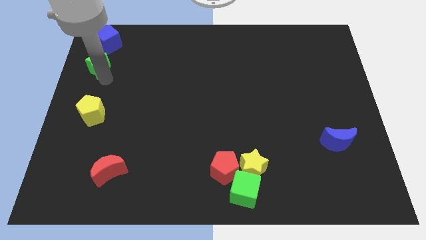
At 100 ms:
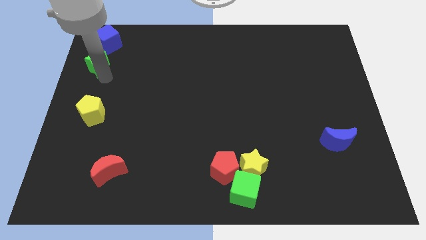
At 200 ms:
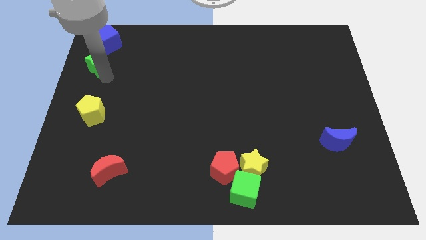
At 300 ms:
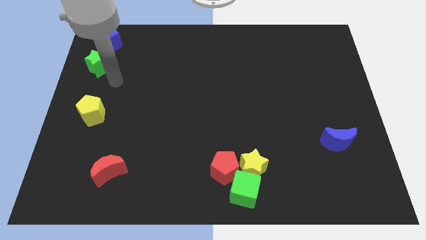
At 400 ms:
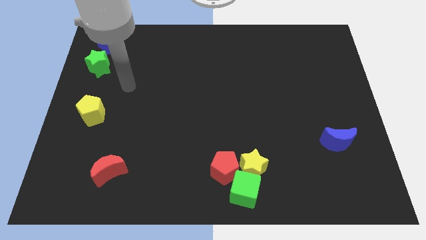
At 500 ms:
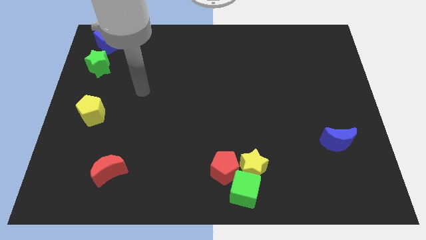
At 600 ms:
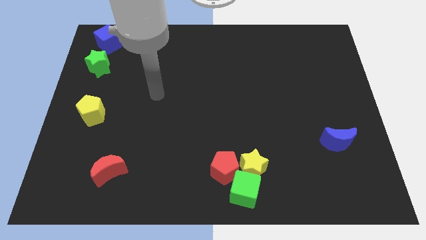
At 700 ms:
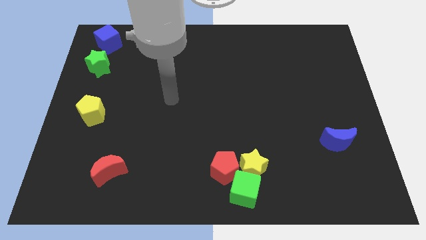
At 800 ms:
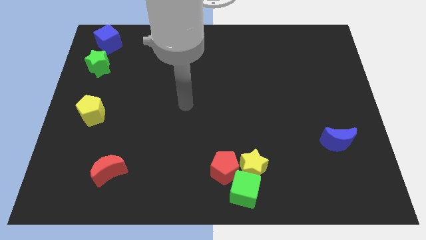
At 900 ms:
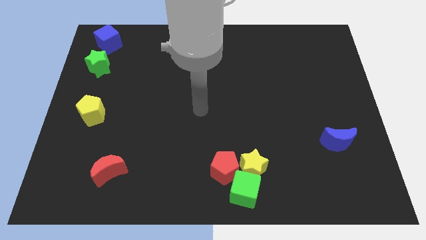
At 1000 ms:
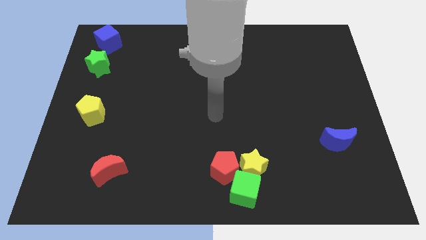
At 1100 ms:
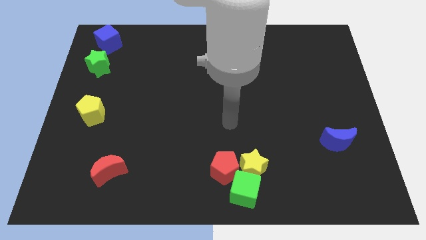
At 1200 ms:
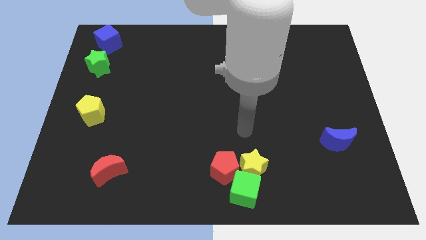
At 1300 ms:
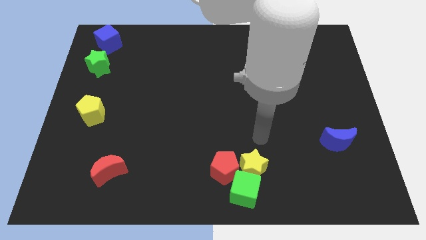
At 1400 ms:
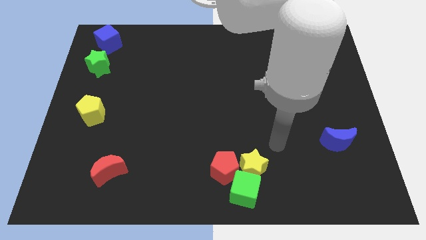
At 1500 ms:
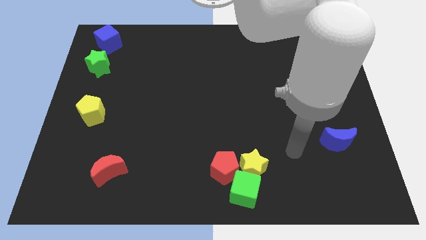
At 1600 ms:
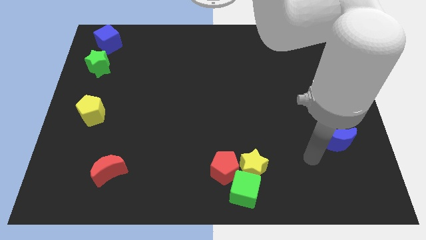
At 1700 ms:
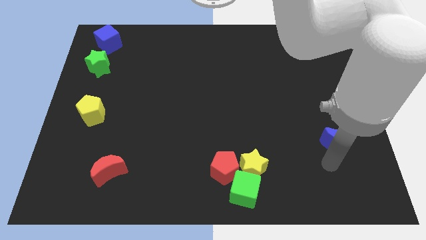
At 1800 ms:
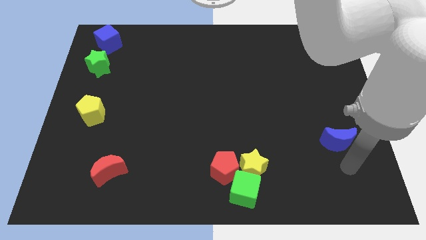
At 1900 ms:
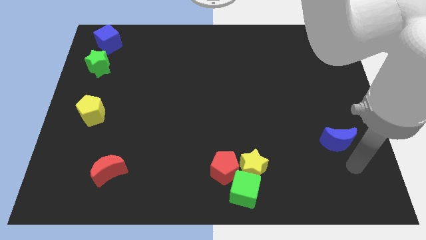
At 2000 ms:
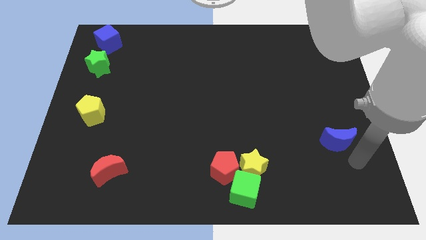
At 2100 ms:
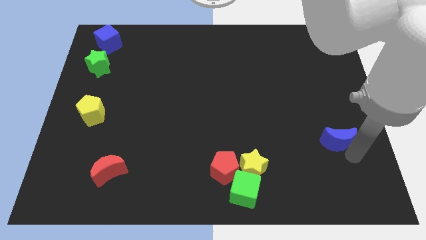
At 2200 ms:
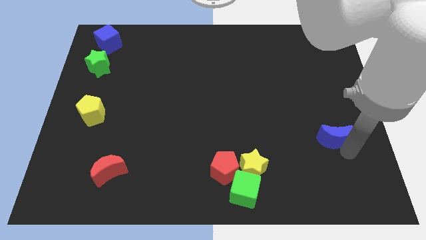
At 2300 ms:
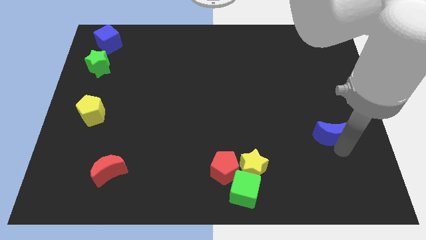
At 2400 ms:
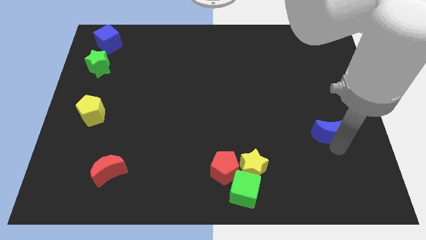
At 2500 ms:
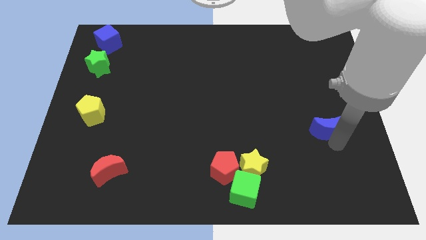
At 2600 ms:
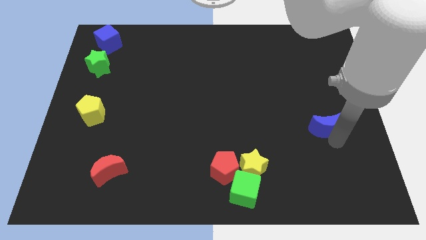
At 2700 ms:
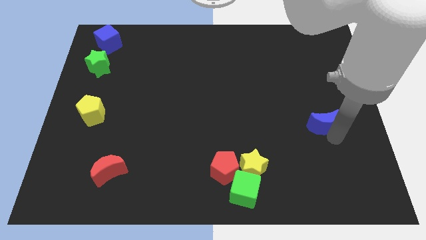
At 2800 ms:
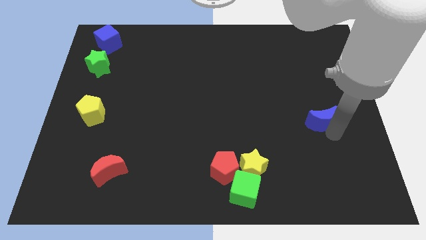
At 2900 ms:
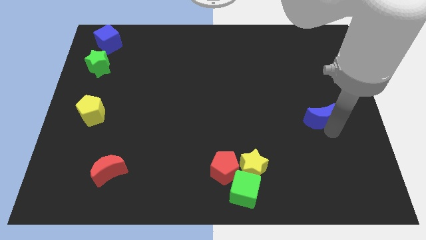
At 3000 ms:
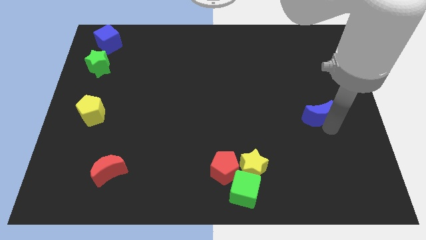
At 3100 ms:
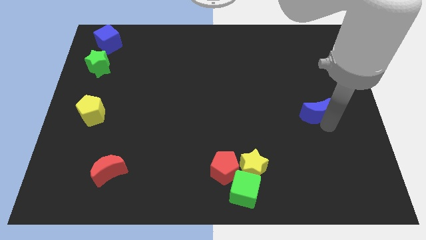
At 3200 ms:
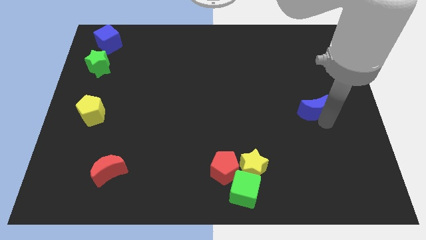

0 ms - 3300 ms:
slightly push the blue moon upwards

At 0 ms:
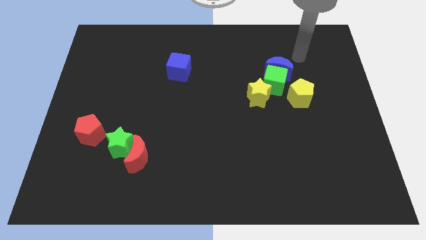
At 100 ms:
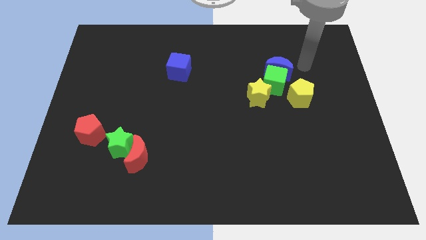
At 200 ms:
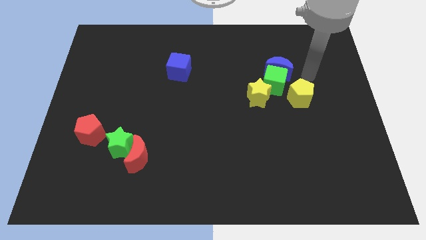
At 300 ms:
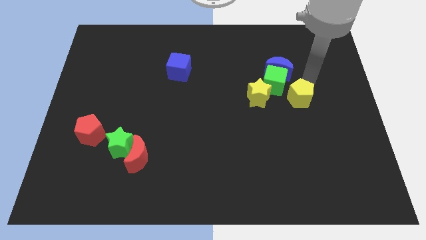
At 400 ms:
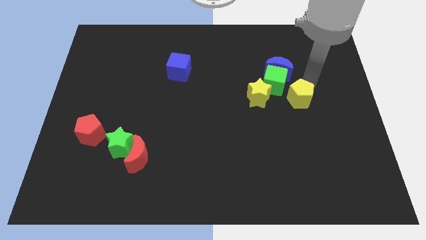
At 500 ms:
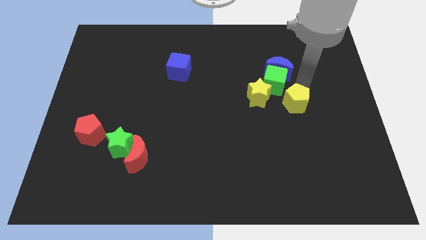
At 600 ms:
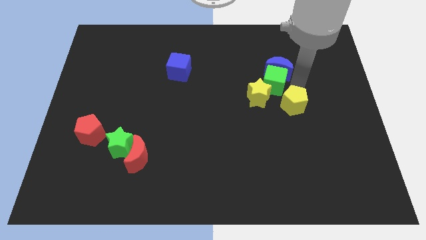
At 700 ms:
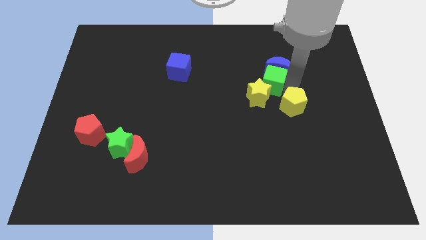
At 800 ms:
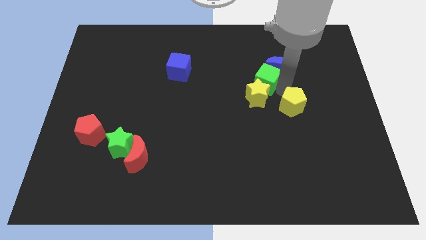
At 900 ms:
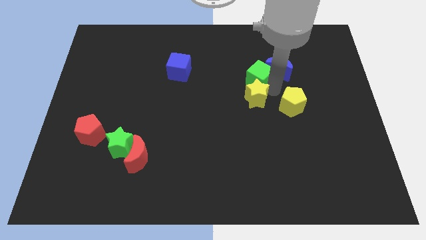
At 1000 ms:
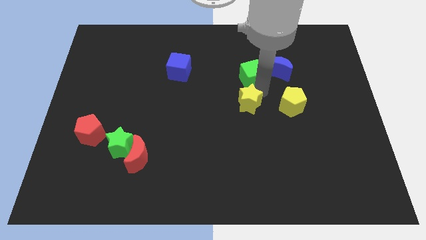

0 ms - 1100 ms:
slightly move the yellow star to the bottom

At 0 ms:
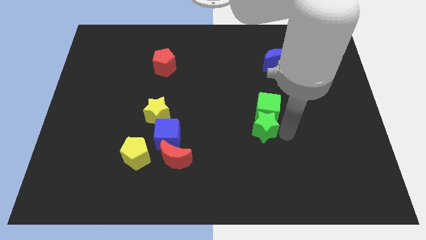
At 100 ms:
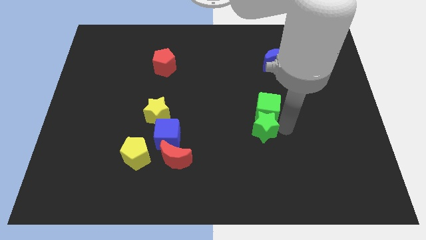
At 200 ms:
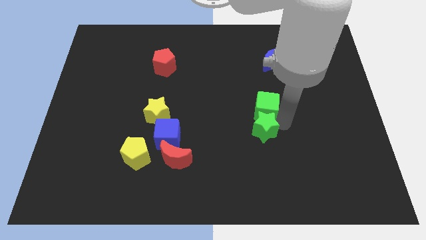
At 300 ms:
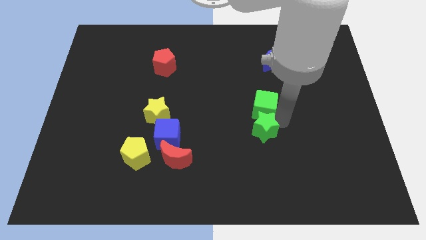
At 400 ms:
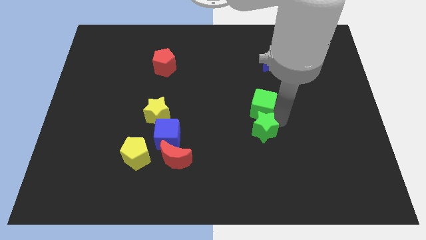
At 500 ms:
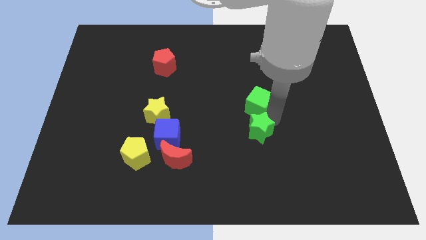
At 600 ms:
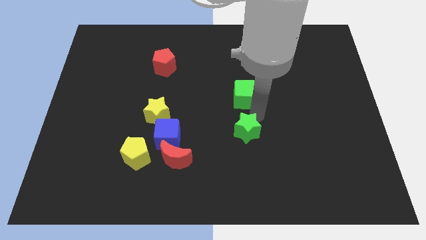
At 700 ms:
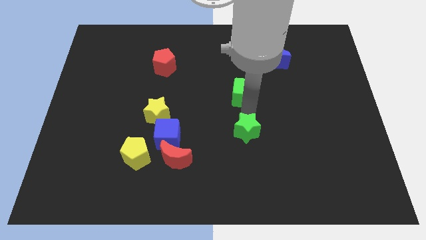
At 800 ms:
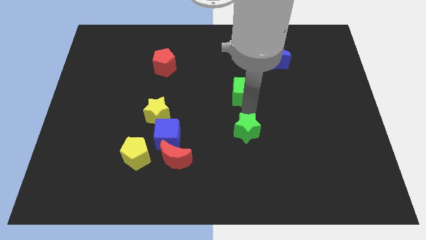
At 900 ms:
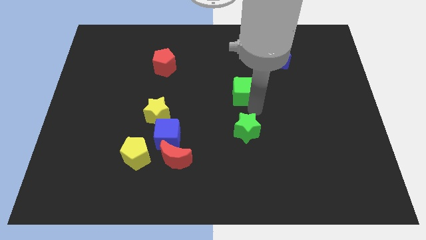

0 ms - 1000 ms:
separate green cube from green star

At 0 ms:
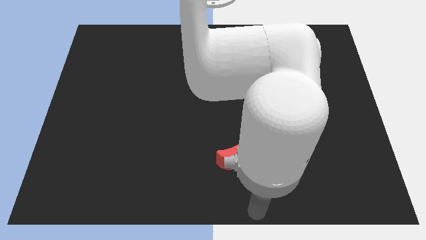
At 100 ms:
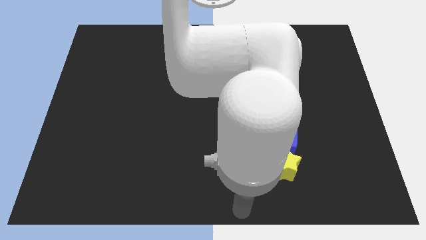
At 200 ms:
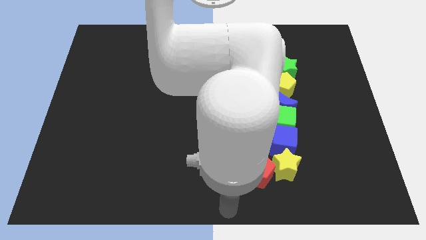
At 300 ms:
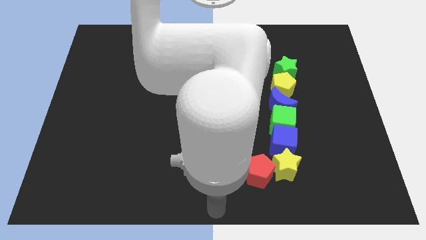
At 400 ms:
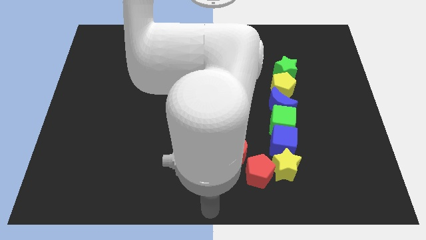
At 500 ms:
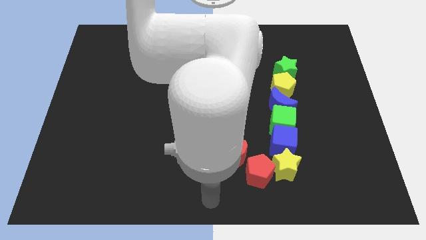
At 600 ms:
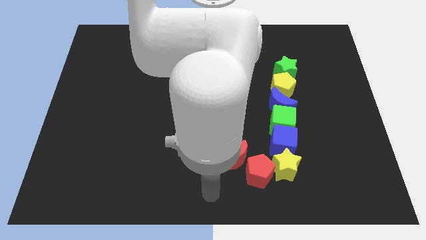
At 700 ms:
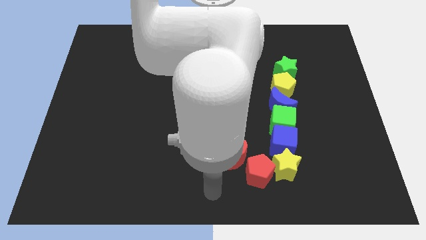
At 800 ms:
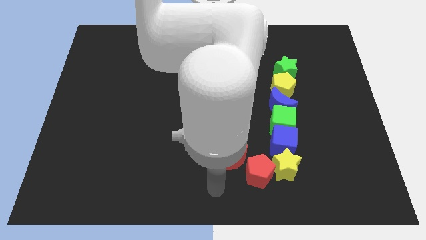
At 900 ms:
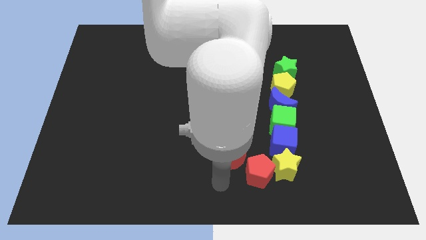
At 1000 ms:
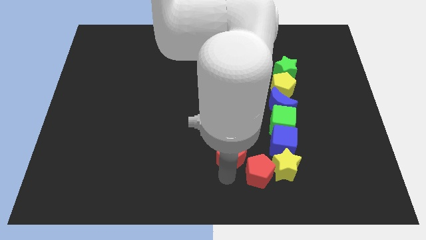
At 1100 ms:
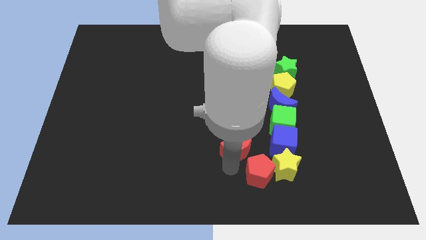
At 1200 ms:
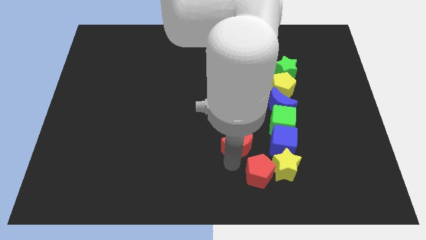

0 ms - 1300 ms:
touch the bottom of red moon

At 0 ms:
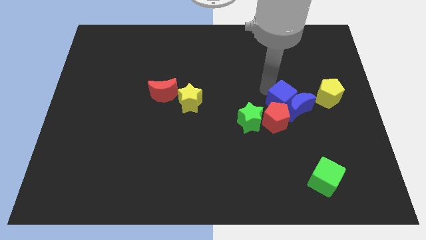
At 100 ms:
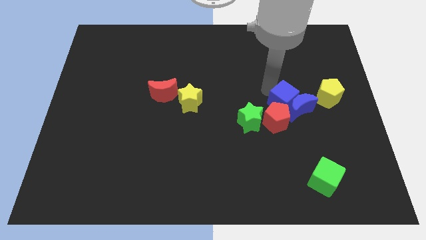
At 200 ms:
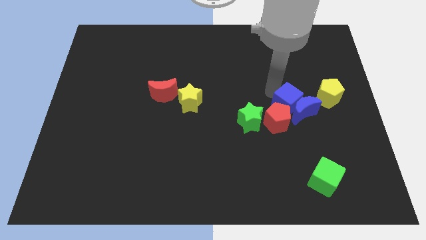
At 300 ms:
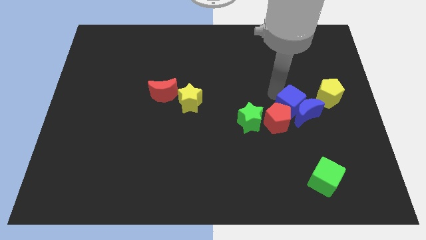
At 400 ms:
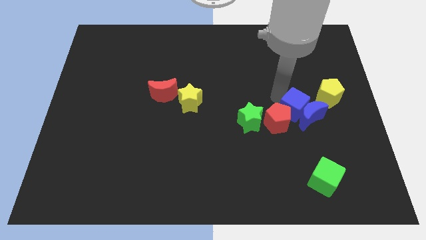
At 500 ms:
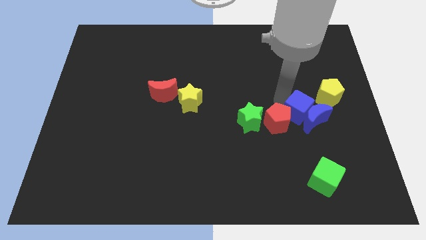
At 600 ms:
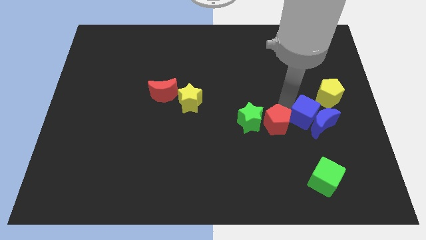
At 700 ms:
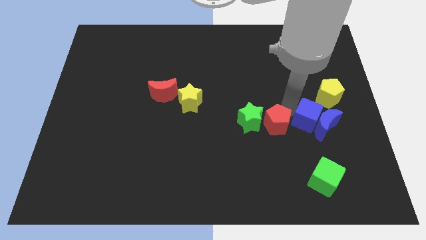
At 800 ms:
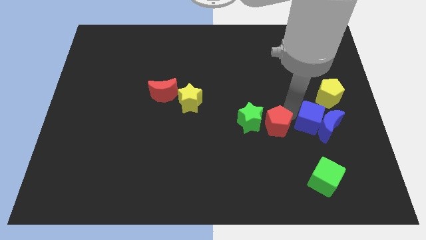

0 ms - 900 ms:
push the blue cube and blue crescent towards bottom right

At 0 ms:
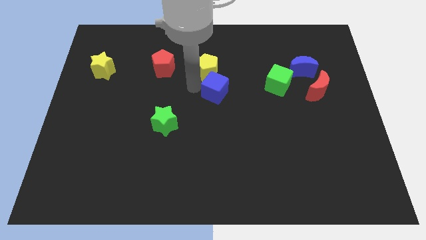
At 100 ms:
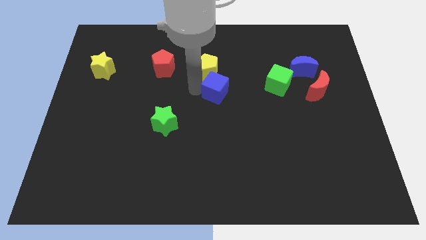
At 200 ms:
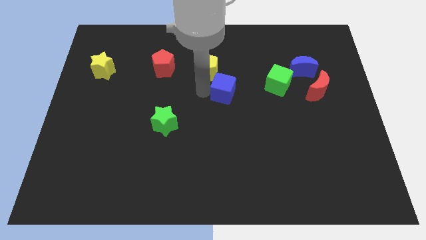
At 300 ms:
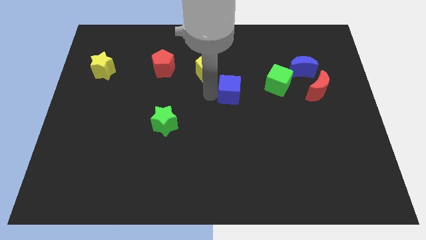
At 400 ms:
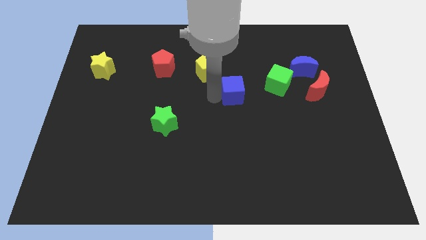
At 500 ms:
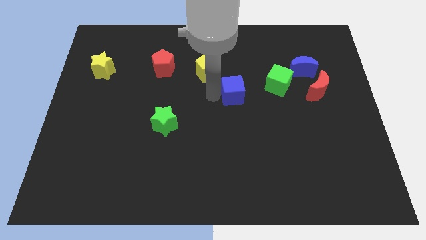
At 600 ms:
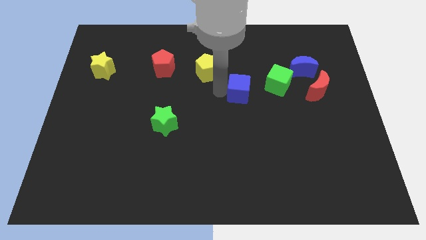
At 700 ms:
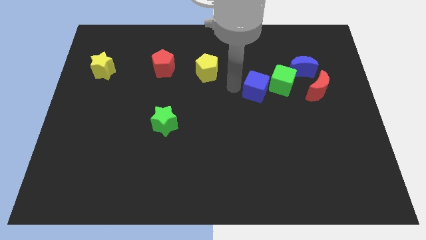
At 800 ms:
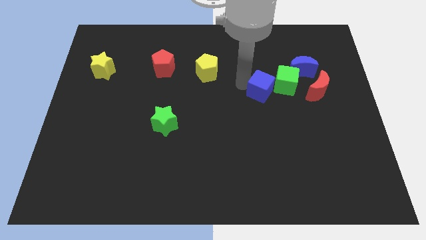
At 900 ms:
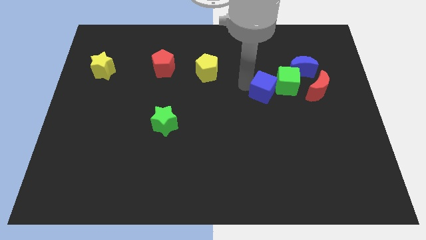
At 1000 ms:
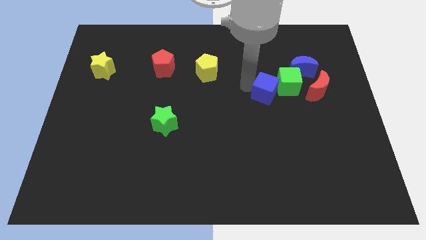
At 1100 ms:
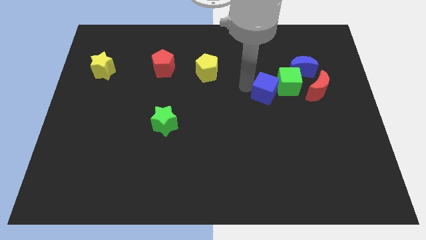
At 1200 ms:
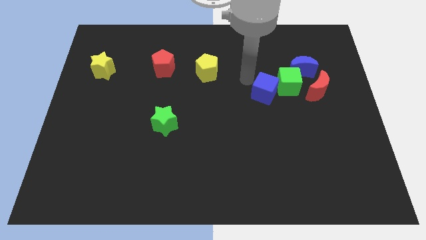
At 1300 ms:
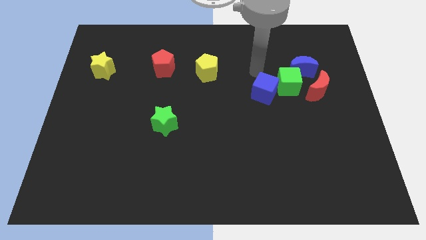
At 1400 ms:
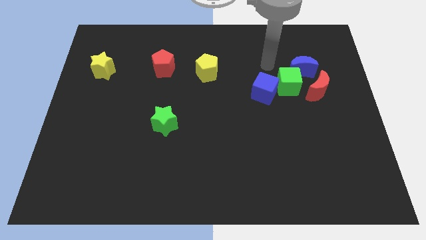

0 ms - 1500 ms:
push the blue cube into green cube
